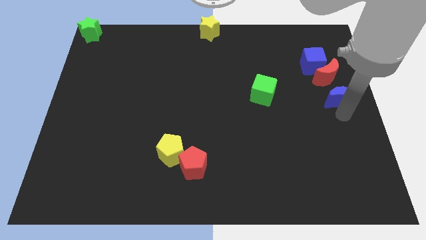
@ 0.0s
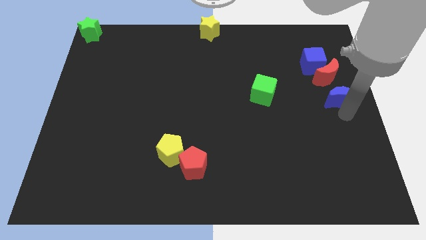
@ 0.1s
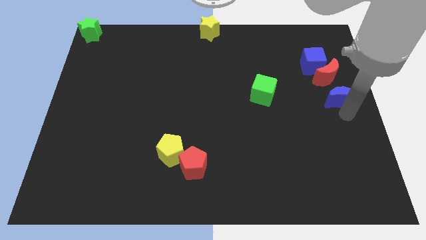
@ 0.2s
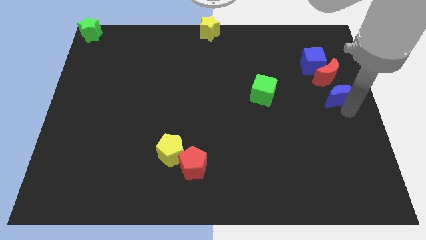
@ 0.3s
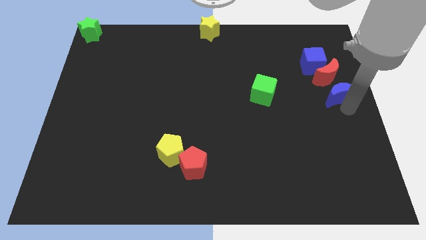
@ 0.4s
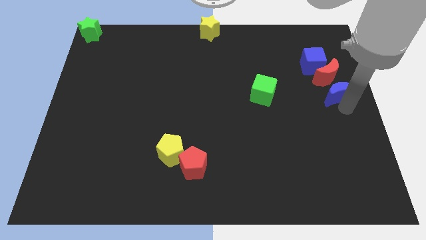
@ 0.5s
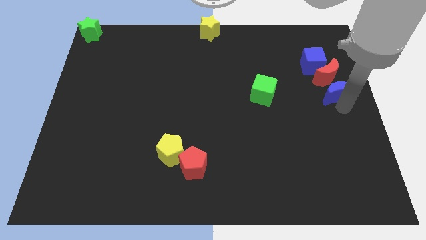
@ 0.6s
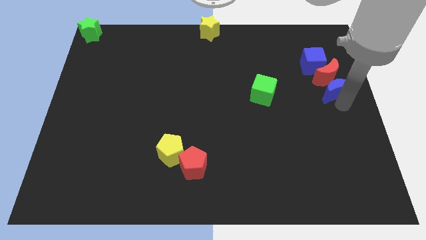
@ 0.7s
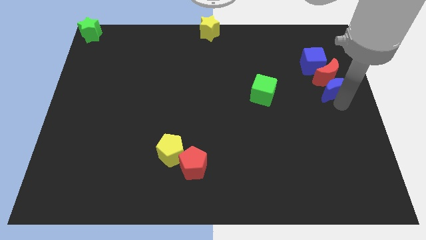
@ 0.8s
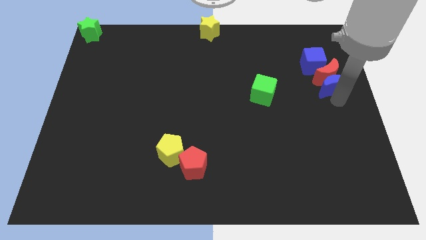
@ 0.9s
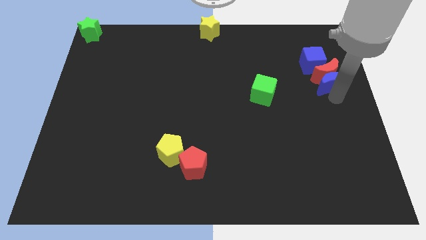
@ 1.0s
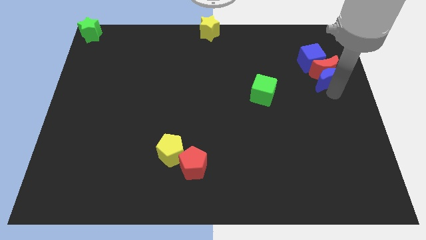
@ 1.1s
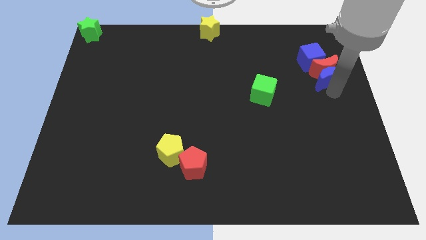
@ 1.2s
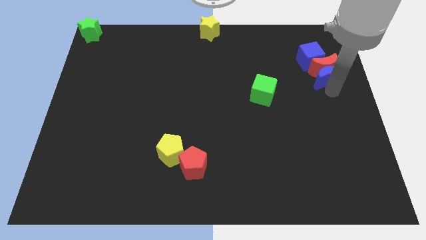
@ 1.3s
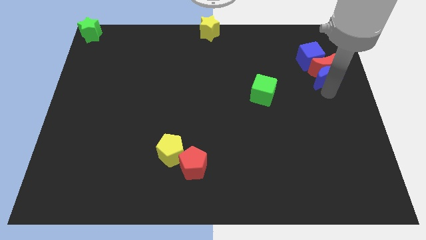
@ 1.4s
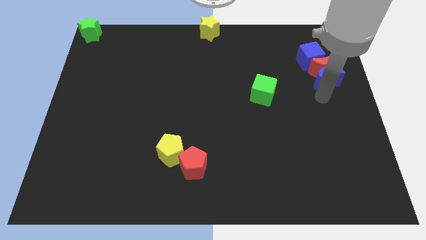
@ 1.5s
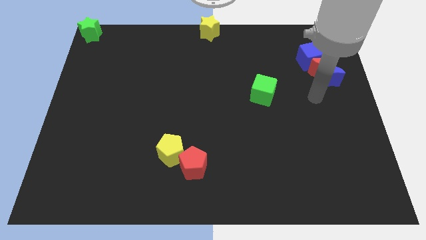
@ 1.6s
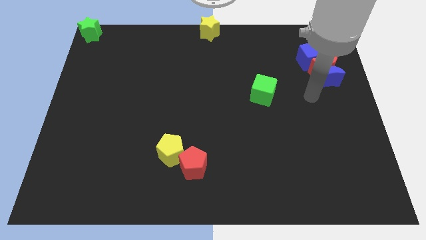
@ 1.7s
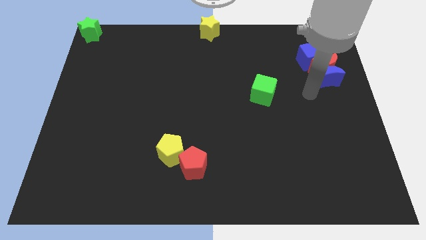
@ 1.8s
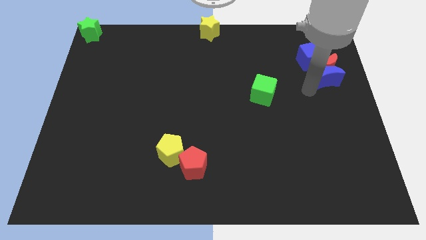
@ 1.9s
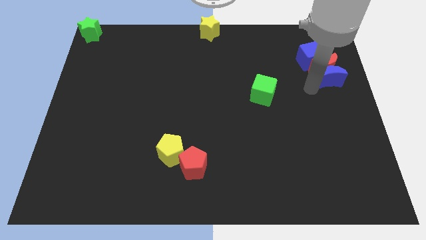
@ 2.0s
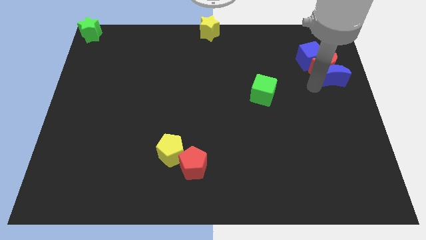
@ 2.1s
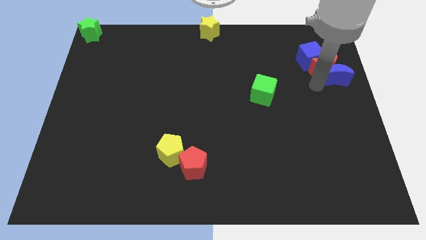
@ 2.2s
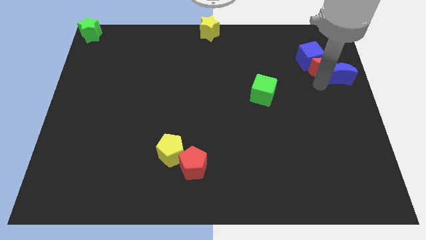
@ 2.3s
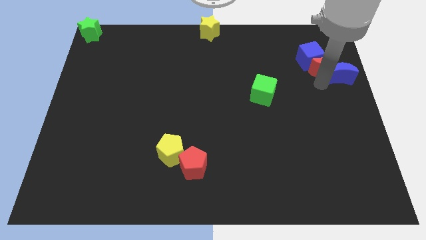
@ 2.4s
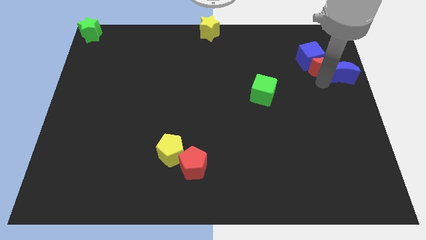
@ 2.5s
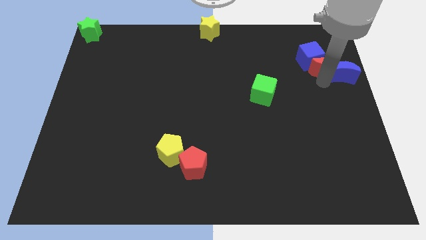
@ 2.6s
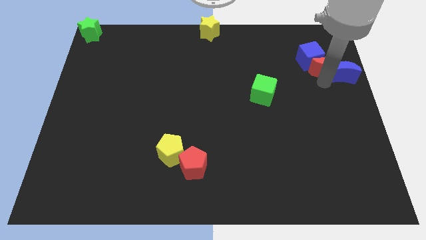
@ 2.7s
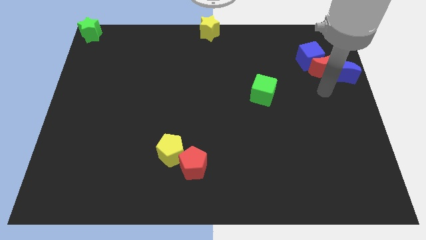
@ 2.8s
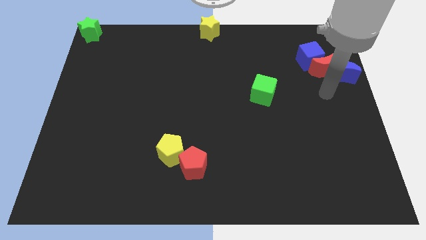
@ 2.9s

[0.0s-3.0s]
place blue moon into the red moon

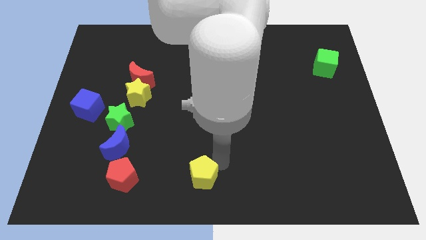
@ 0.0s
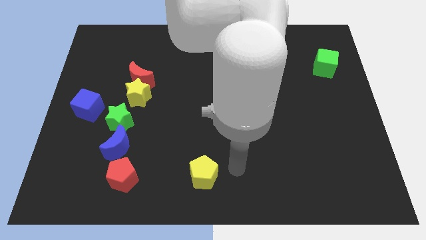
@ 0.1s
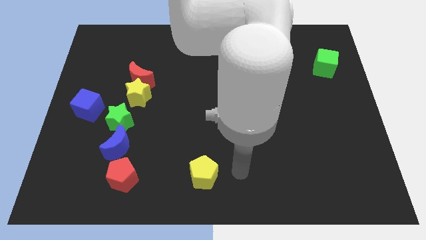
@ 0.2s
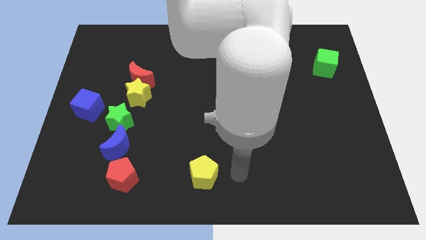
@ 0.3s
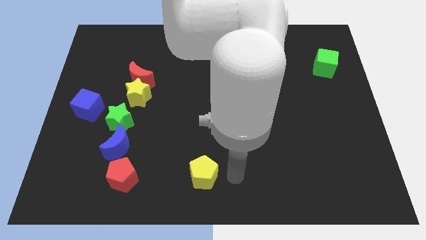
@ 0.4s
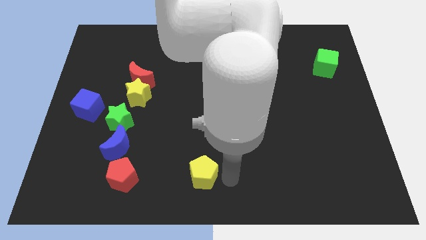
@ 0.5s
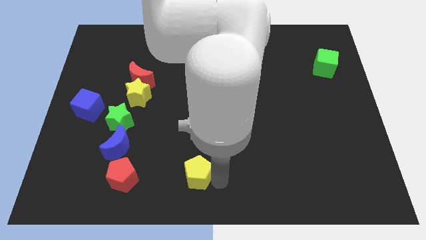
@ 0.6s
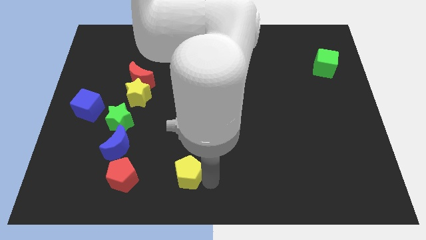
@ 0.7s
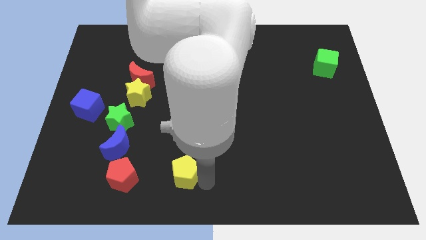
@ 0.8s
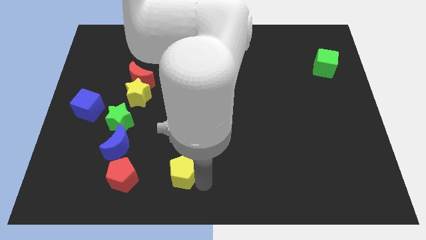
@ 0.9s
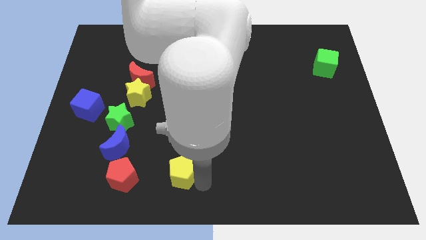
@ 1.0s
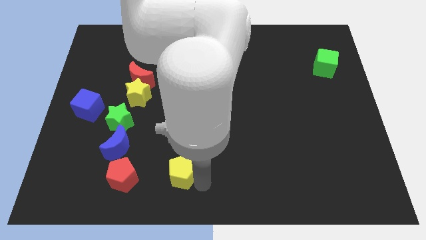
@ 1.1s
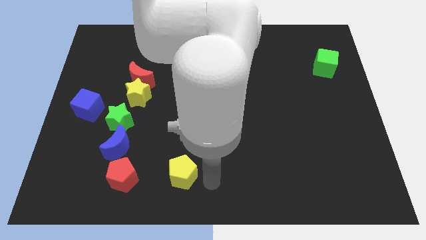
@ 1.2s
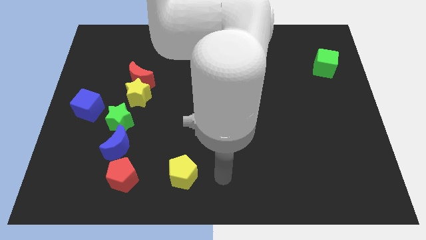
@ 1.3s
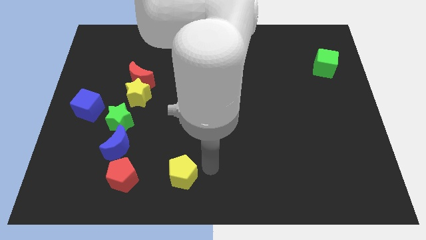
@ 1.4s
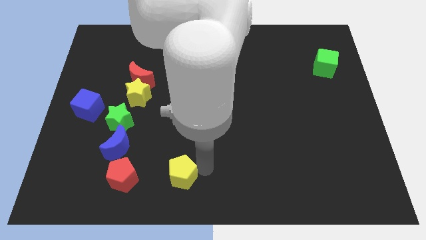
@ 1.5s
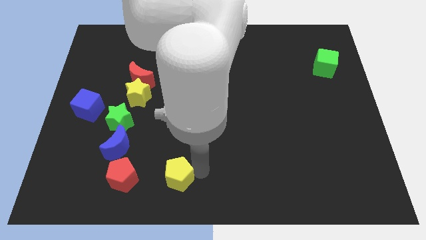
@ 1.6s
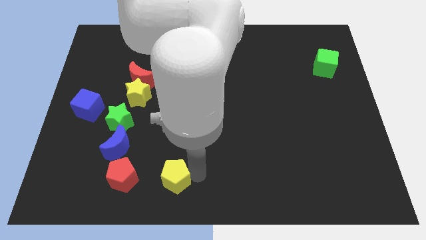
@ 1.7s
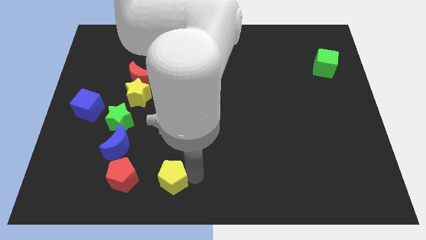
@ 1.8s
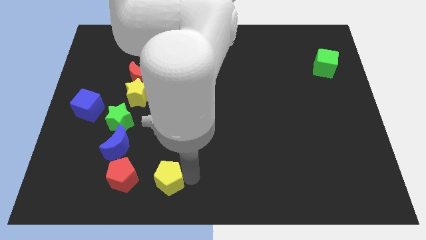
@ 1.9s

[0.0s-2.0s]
slide the yellow pentagon close to the red pentagon

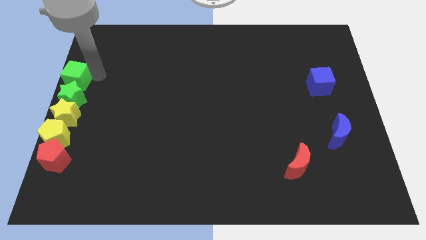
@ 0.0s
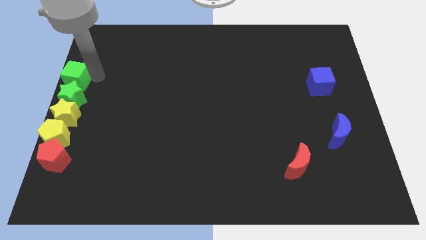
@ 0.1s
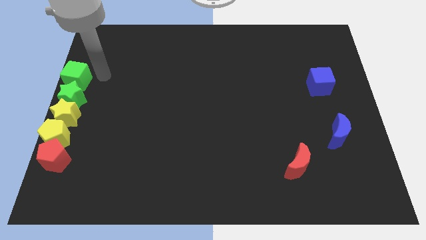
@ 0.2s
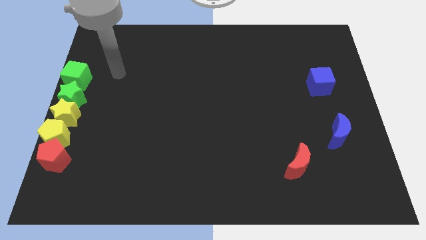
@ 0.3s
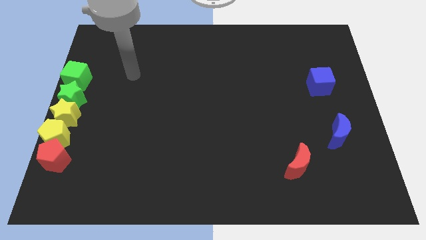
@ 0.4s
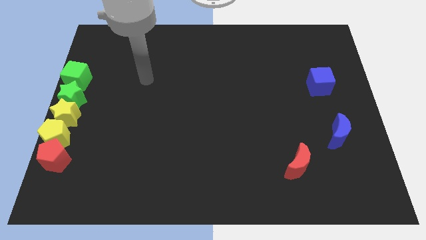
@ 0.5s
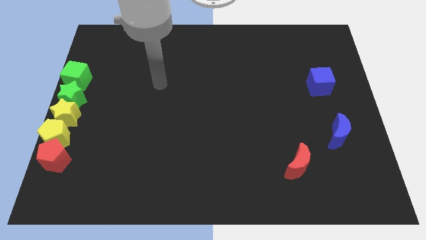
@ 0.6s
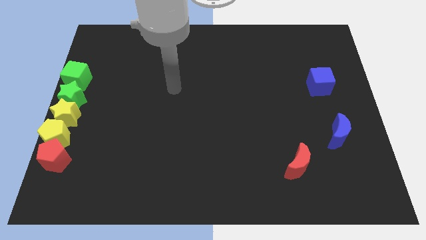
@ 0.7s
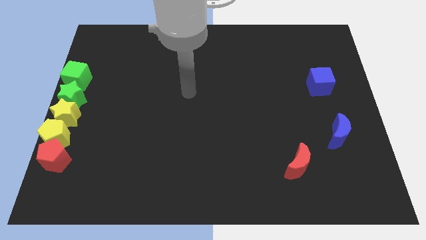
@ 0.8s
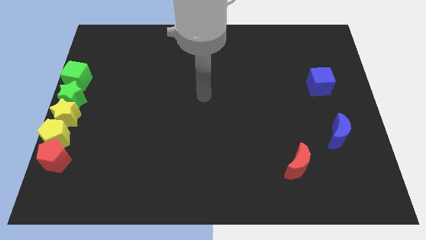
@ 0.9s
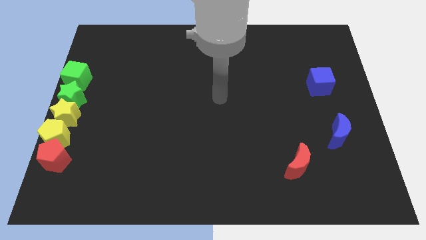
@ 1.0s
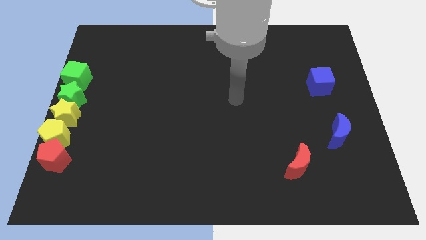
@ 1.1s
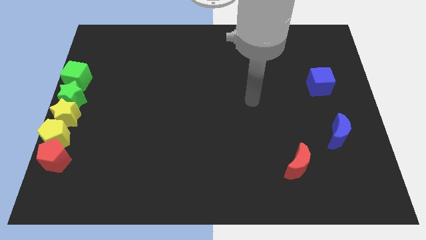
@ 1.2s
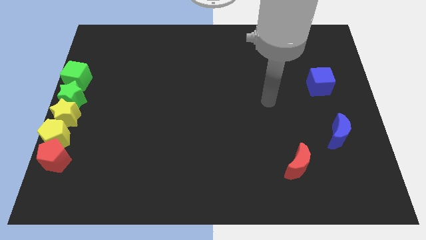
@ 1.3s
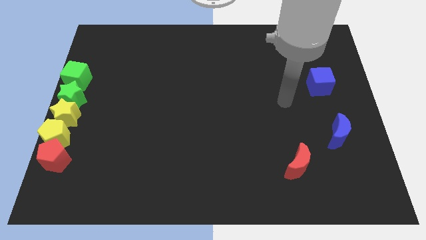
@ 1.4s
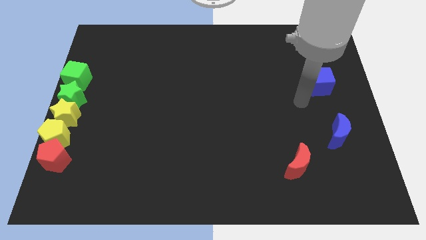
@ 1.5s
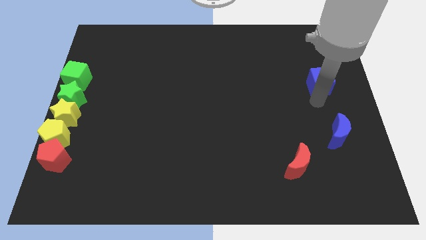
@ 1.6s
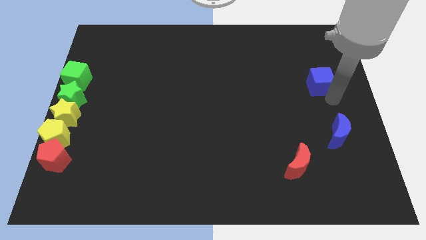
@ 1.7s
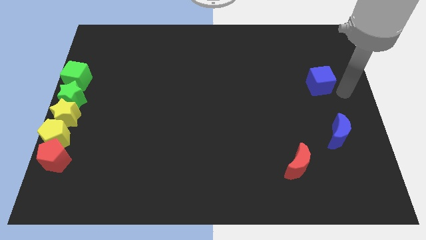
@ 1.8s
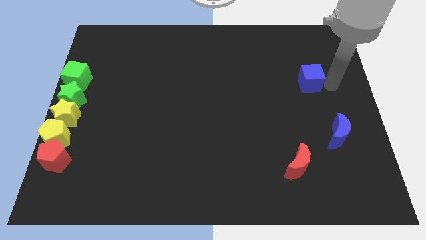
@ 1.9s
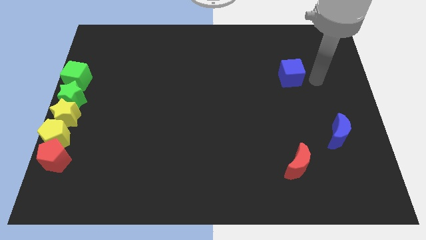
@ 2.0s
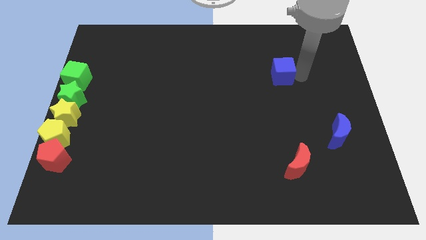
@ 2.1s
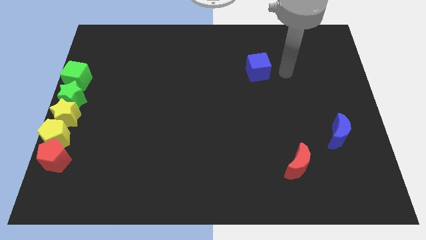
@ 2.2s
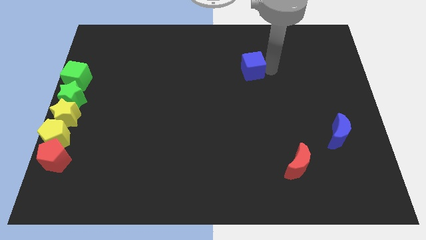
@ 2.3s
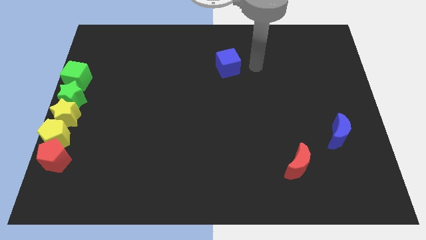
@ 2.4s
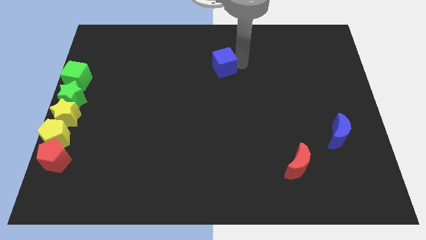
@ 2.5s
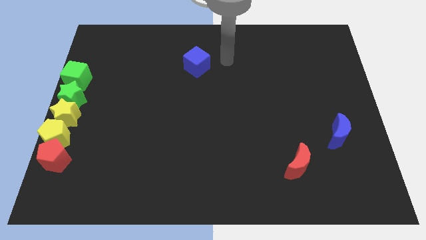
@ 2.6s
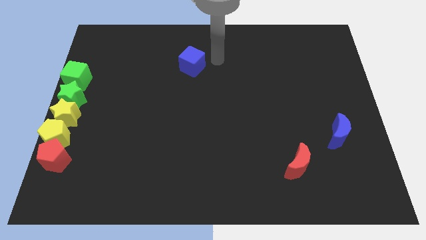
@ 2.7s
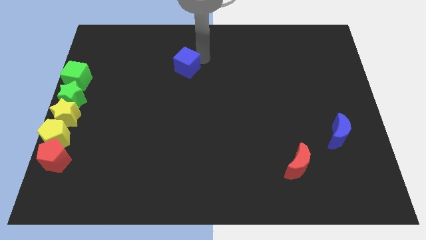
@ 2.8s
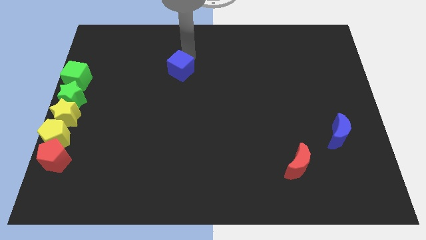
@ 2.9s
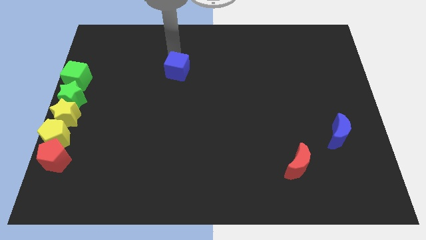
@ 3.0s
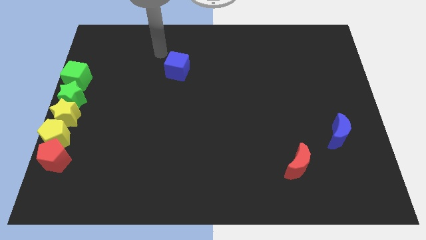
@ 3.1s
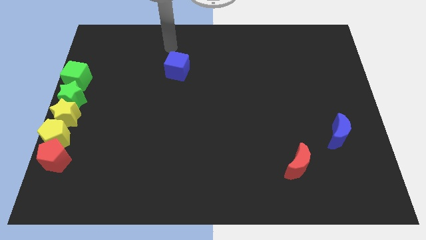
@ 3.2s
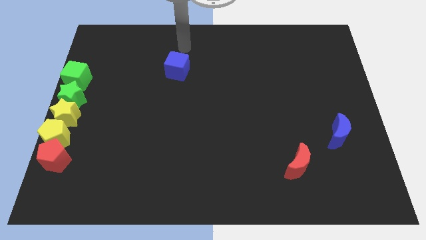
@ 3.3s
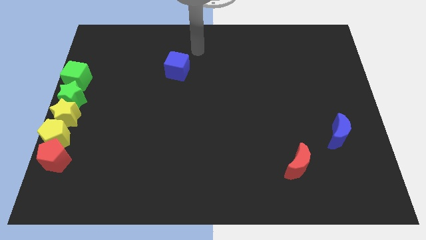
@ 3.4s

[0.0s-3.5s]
move blue cube towards the green cube

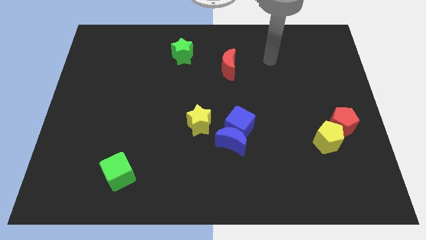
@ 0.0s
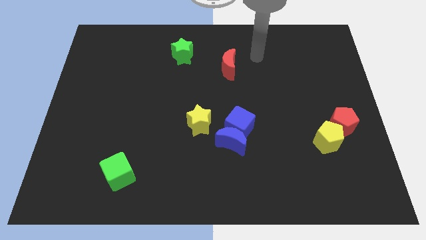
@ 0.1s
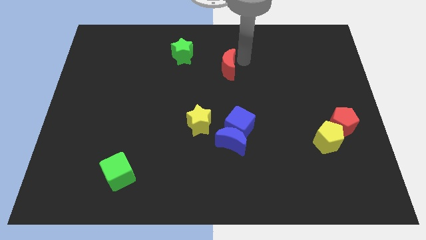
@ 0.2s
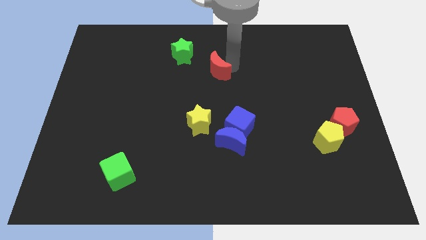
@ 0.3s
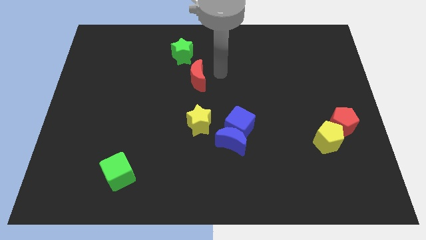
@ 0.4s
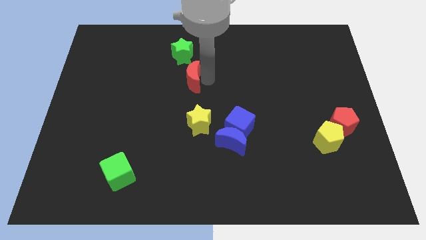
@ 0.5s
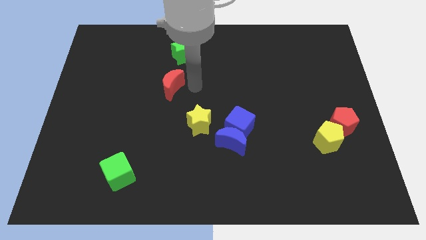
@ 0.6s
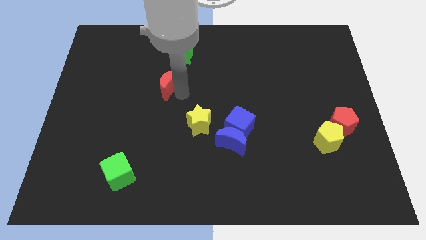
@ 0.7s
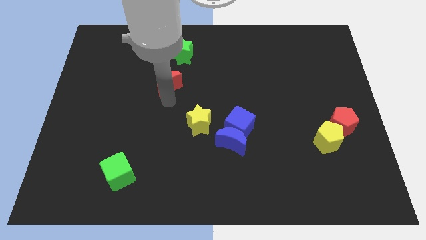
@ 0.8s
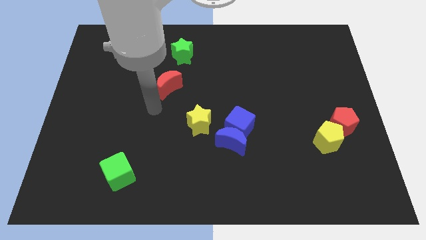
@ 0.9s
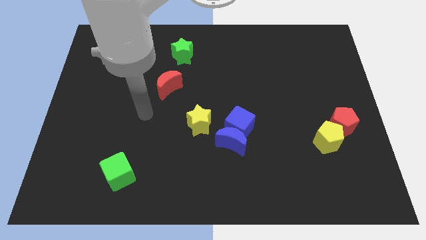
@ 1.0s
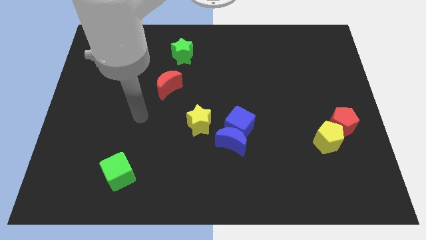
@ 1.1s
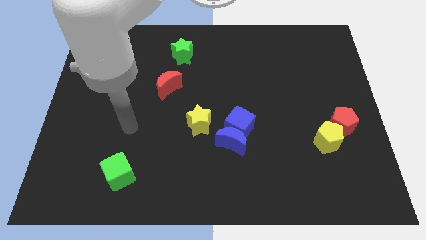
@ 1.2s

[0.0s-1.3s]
push the red crescent to the bottom of the green star
